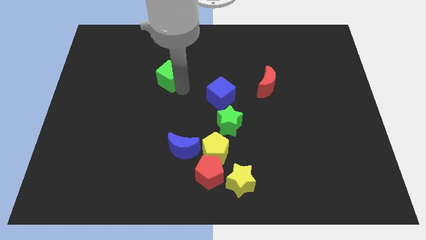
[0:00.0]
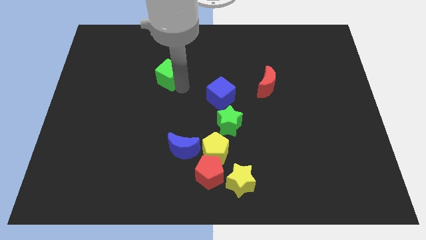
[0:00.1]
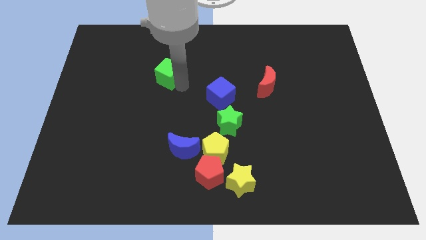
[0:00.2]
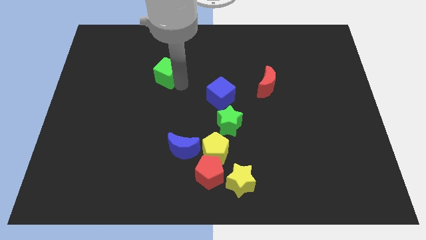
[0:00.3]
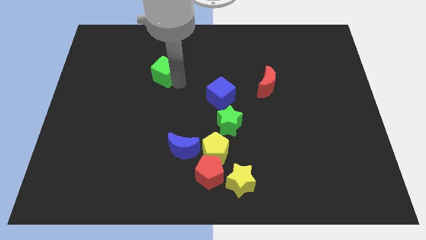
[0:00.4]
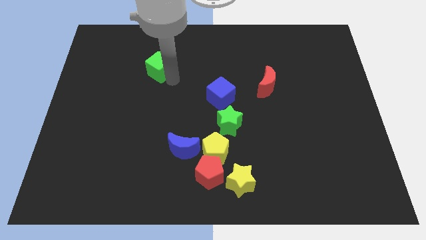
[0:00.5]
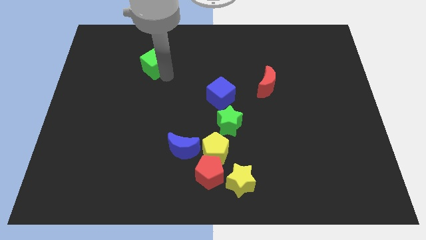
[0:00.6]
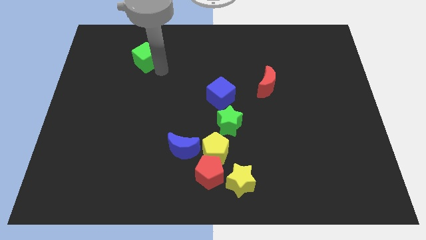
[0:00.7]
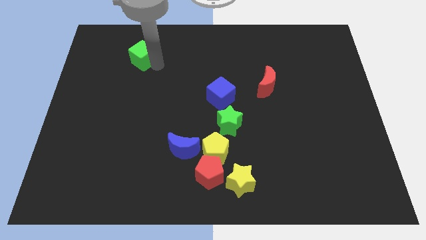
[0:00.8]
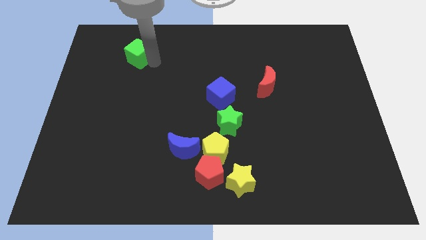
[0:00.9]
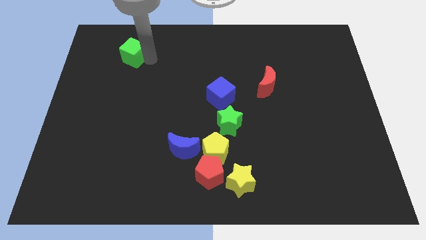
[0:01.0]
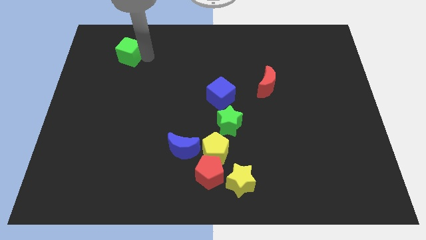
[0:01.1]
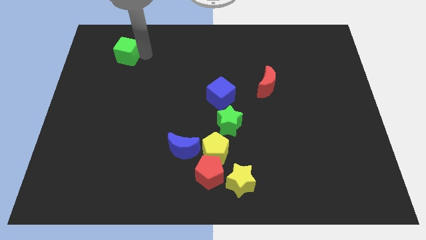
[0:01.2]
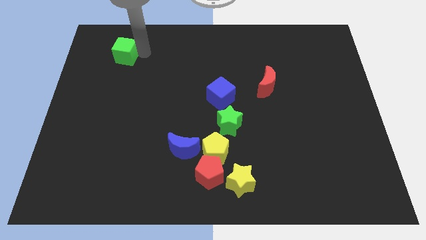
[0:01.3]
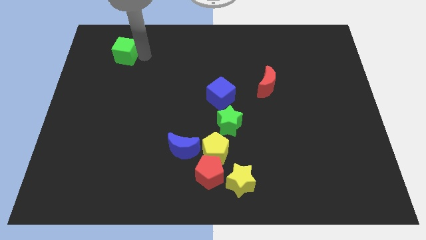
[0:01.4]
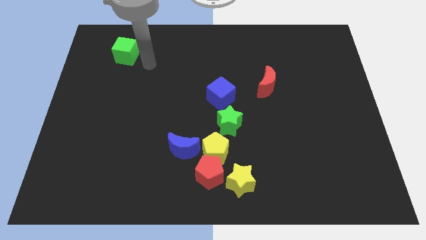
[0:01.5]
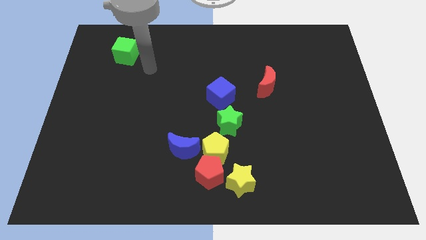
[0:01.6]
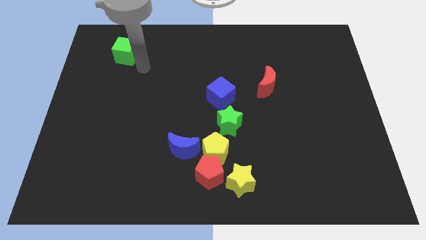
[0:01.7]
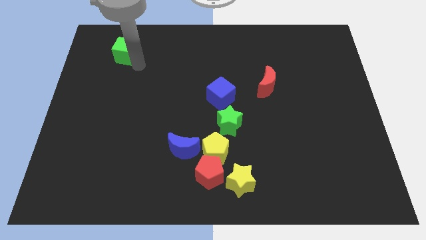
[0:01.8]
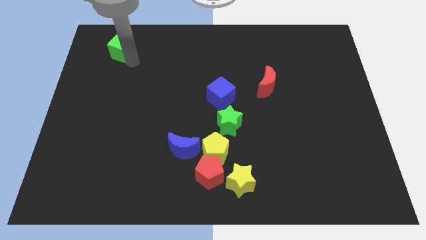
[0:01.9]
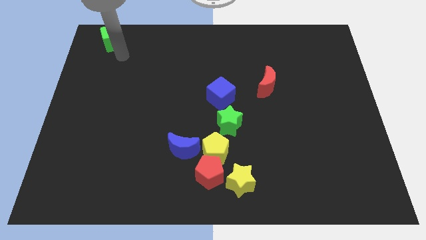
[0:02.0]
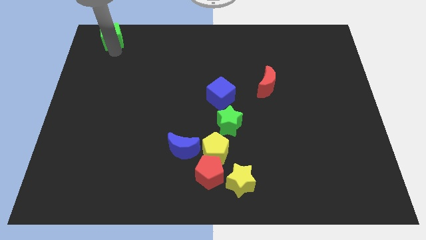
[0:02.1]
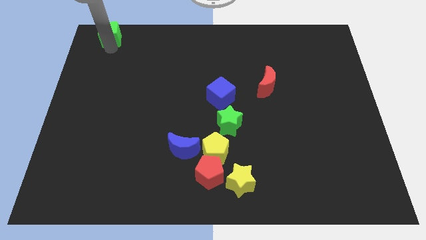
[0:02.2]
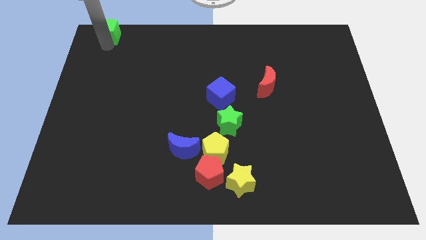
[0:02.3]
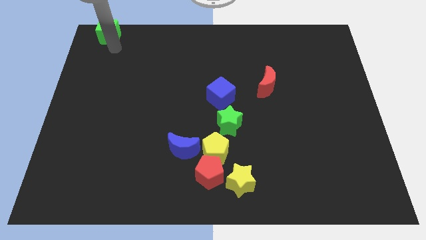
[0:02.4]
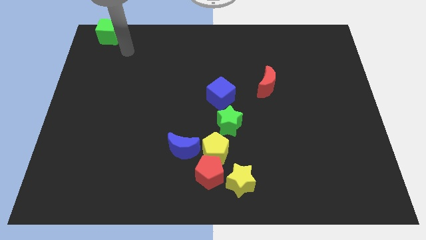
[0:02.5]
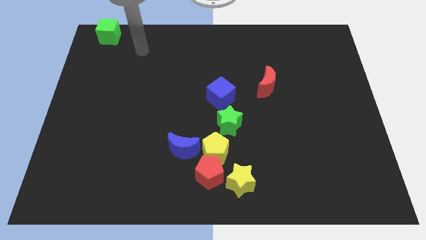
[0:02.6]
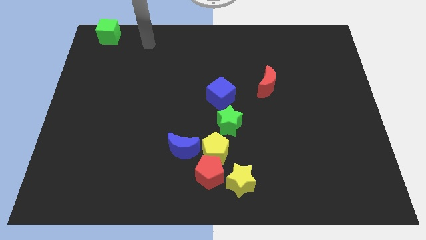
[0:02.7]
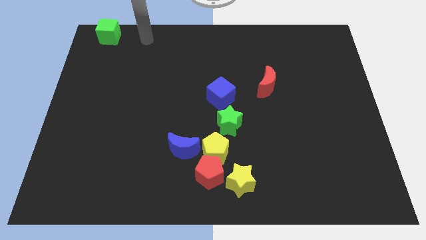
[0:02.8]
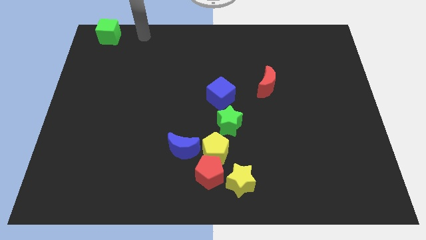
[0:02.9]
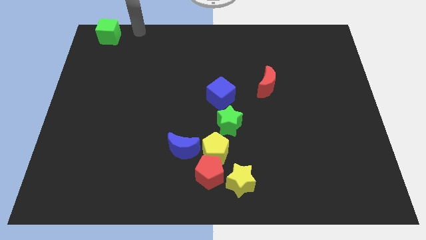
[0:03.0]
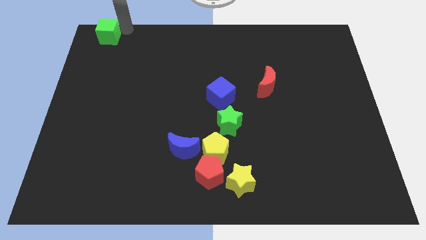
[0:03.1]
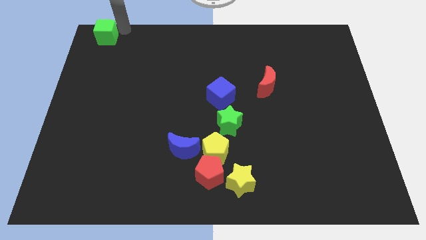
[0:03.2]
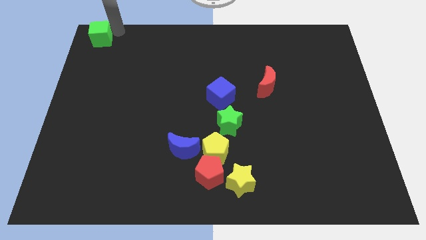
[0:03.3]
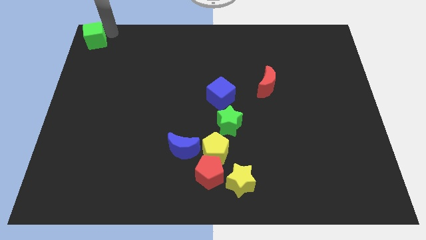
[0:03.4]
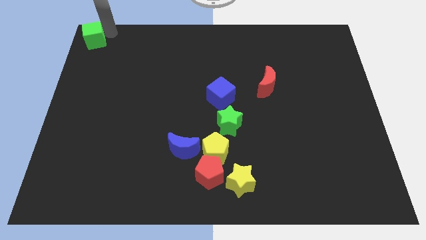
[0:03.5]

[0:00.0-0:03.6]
move the green cube to the top left corner

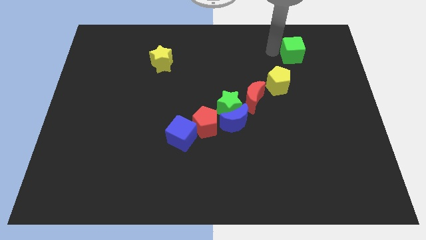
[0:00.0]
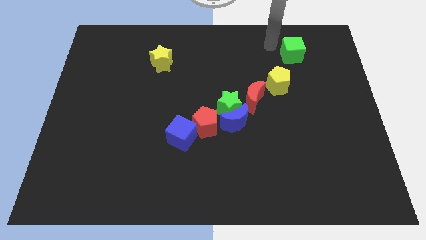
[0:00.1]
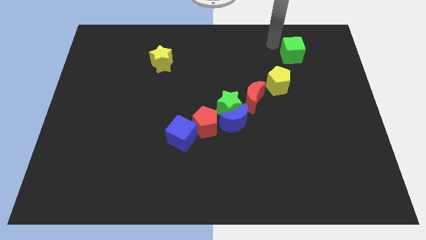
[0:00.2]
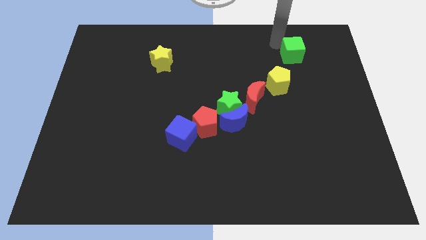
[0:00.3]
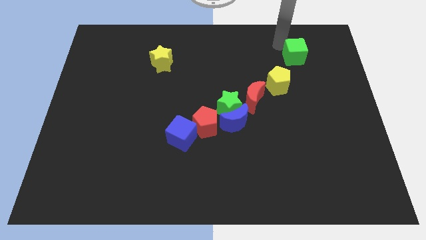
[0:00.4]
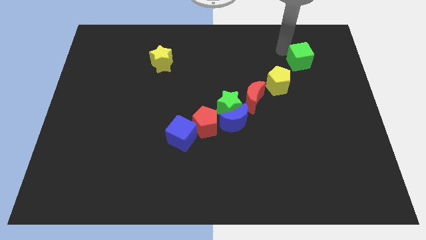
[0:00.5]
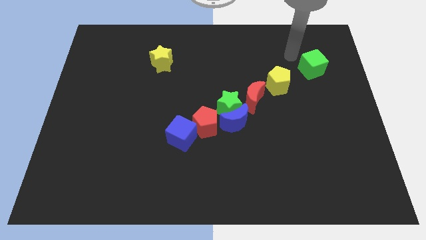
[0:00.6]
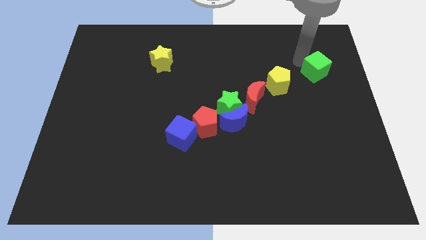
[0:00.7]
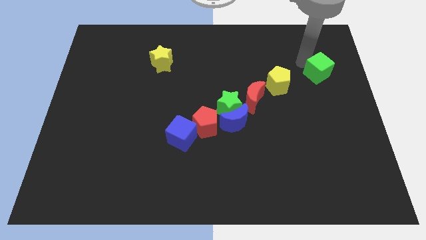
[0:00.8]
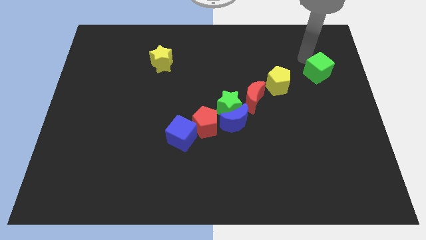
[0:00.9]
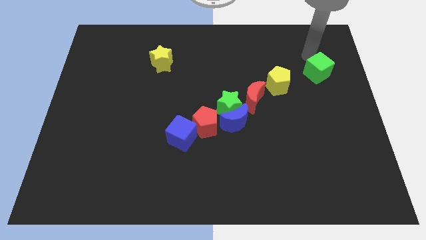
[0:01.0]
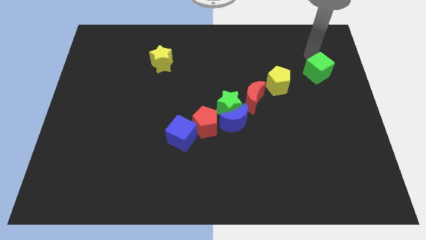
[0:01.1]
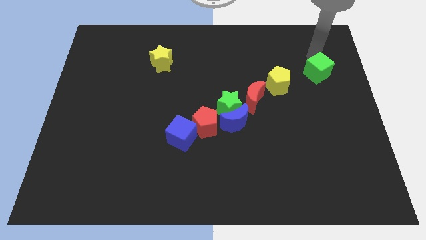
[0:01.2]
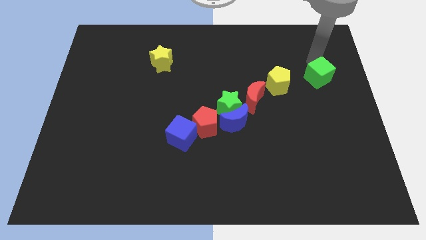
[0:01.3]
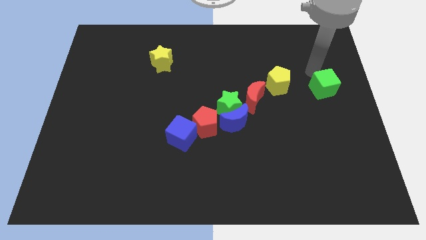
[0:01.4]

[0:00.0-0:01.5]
put the green cube right to the yellow pentagon

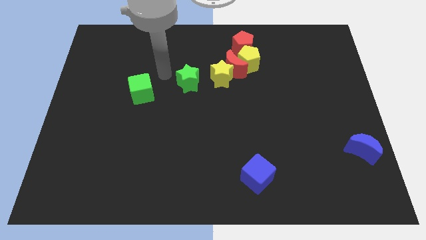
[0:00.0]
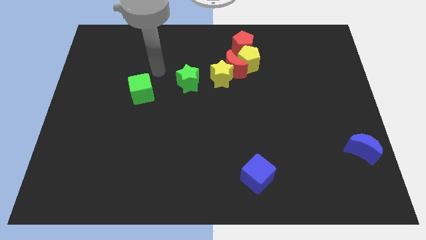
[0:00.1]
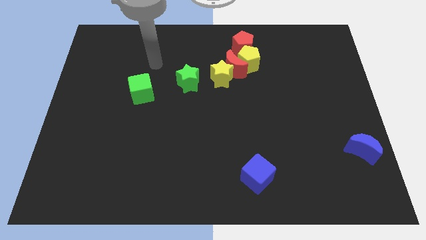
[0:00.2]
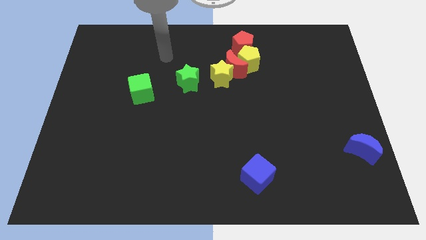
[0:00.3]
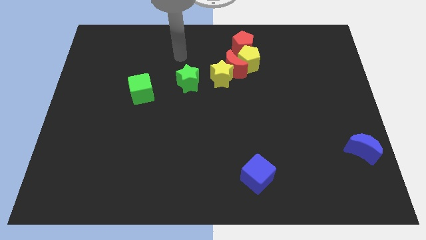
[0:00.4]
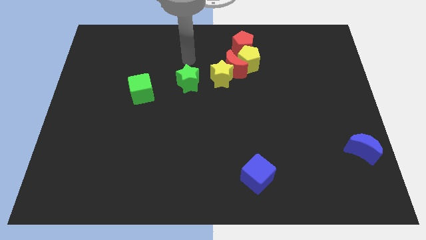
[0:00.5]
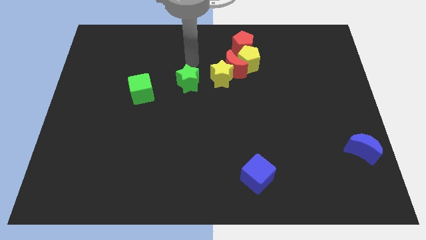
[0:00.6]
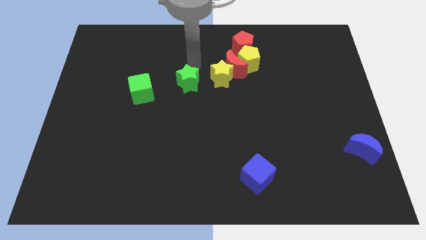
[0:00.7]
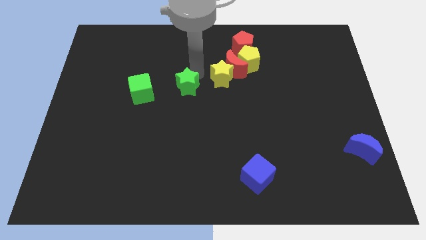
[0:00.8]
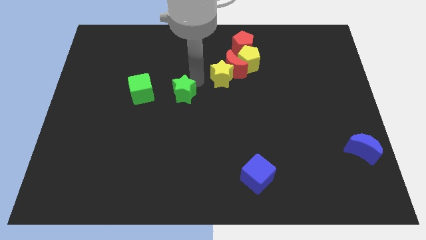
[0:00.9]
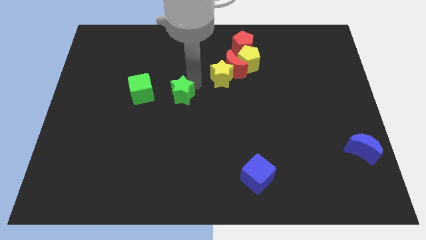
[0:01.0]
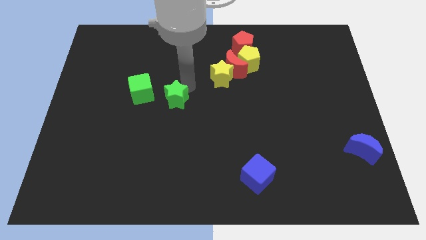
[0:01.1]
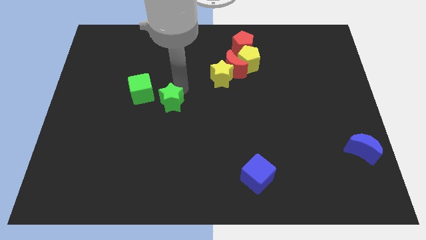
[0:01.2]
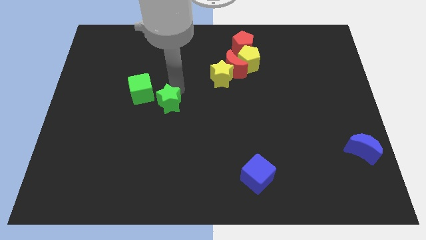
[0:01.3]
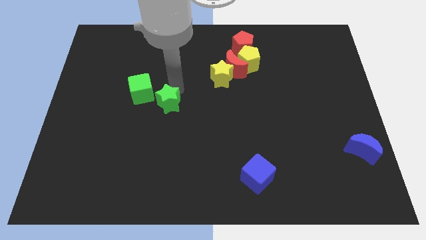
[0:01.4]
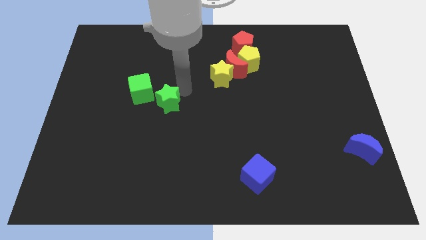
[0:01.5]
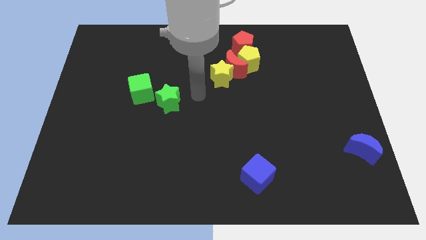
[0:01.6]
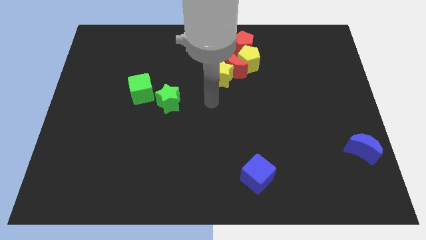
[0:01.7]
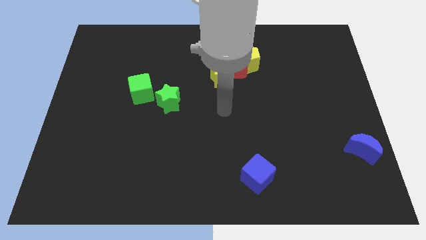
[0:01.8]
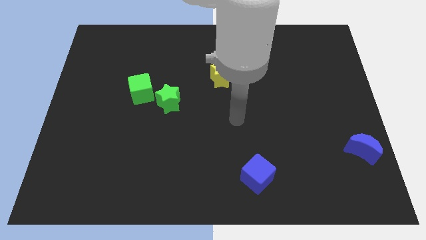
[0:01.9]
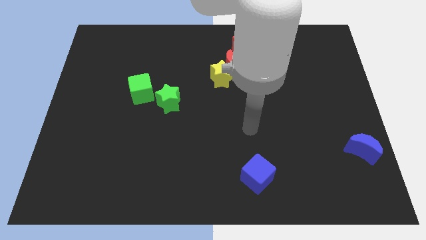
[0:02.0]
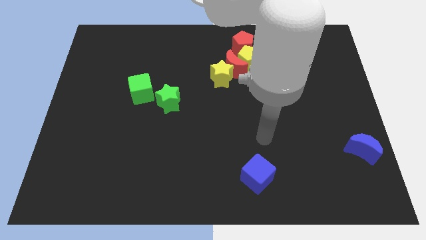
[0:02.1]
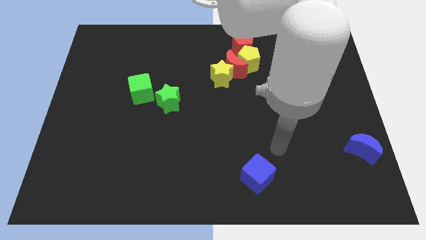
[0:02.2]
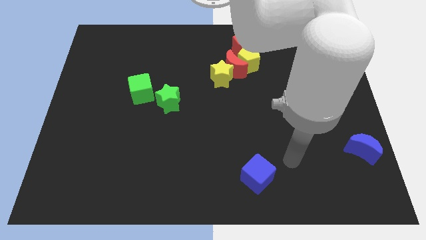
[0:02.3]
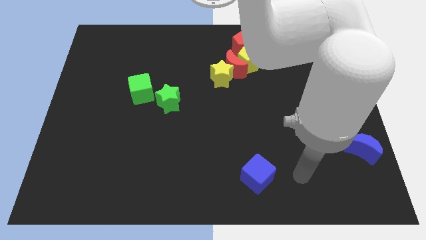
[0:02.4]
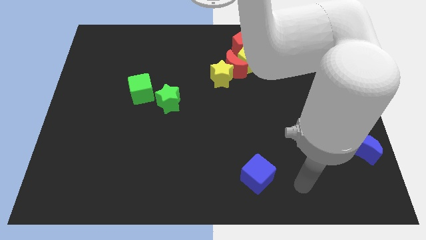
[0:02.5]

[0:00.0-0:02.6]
place the green star diagonally bottom right to green cube

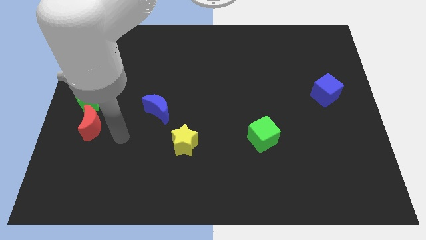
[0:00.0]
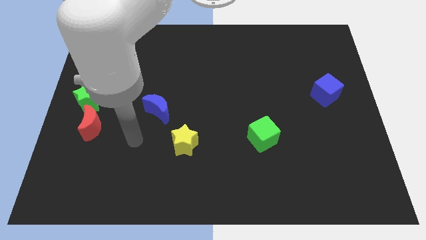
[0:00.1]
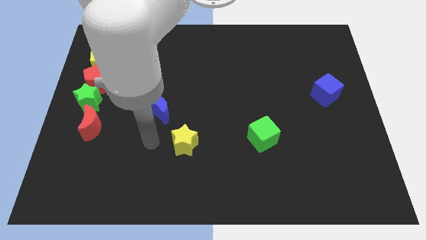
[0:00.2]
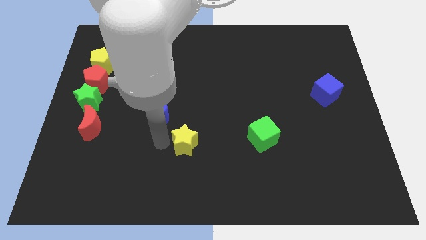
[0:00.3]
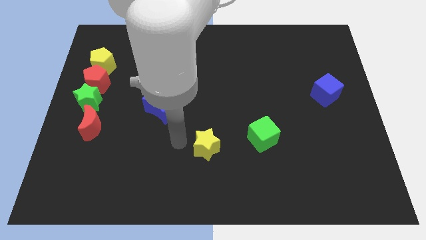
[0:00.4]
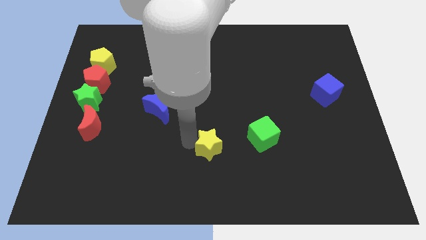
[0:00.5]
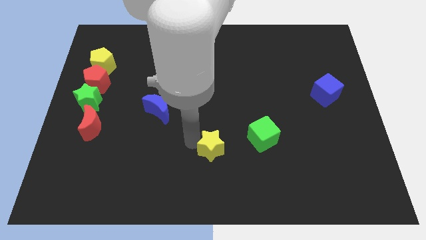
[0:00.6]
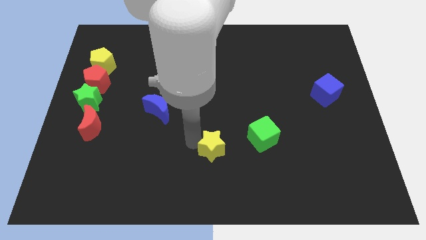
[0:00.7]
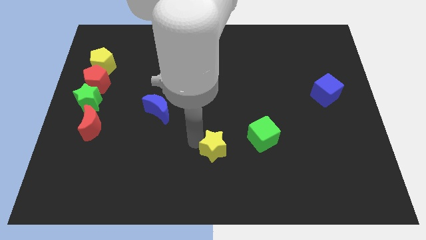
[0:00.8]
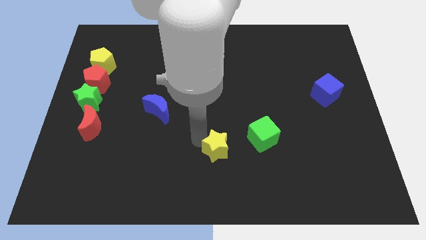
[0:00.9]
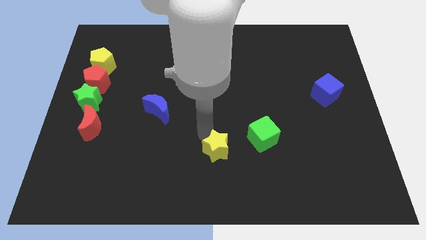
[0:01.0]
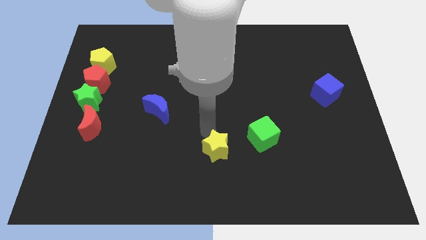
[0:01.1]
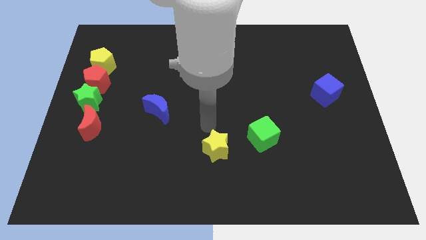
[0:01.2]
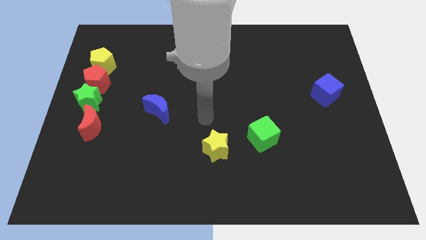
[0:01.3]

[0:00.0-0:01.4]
push the yellow star slightly to the right of the board
